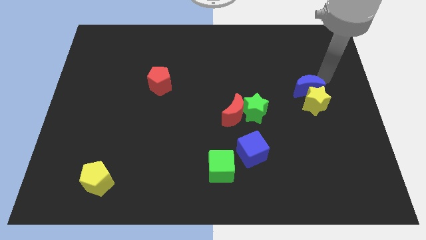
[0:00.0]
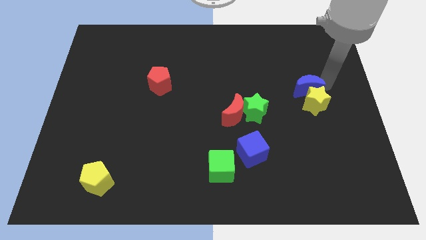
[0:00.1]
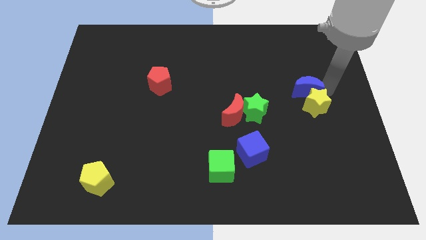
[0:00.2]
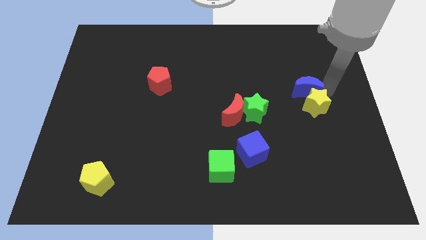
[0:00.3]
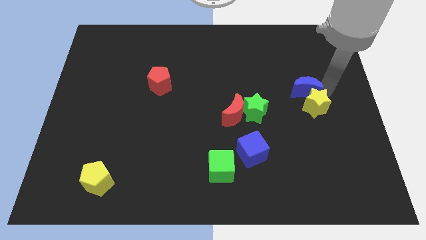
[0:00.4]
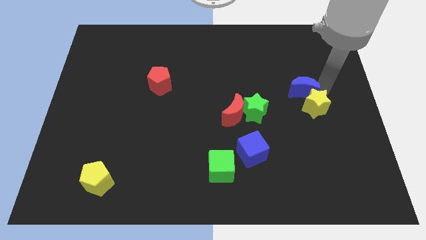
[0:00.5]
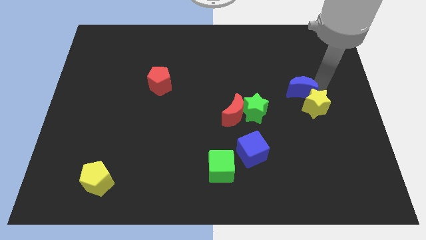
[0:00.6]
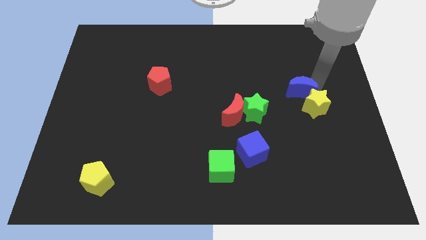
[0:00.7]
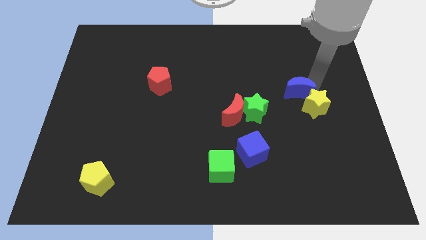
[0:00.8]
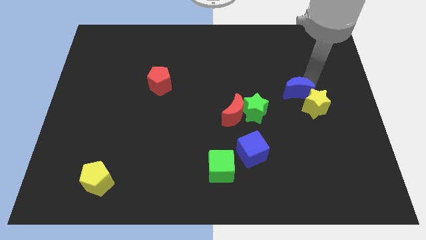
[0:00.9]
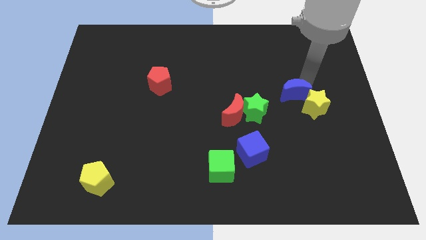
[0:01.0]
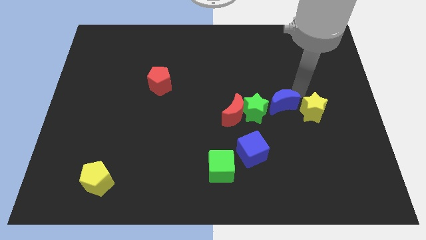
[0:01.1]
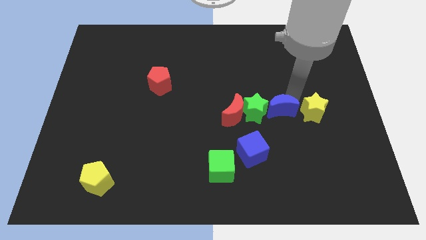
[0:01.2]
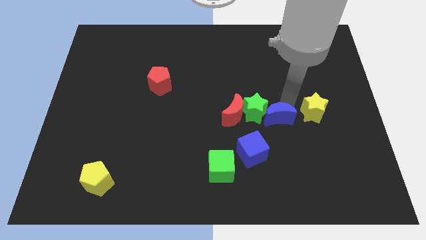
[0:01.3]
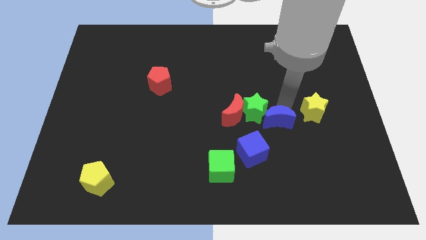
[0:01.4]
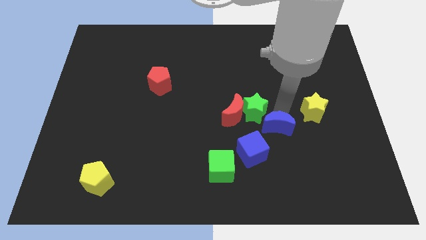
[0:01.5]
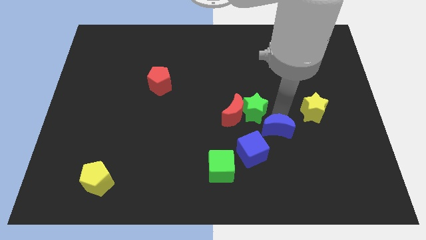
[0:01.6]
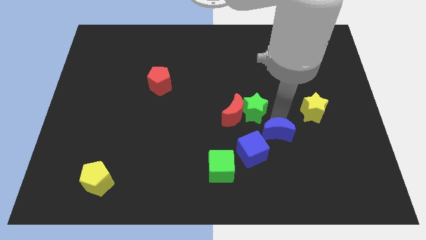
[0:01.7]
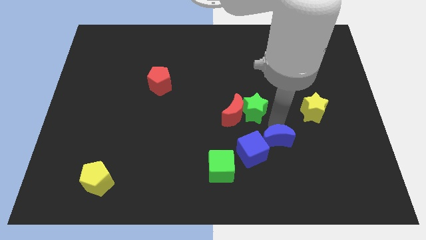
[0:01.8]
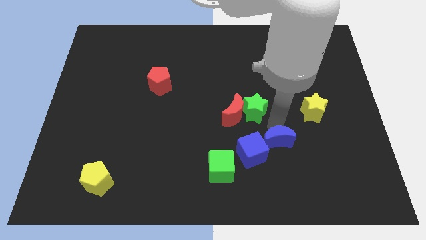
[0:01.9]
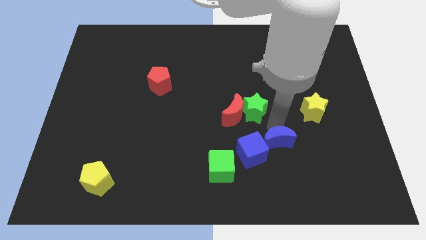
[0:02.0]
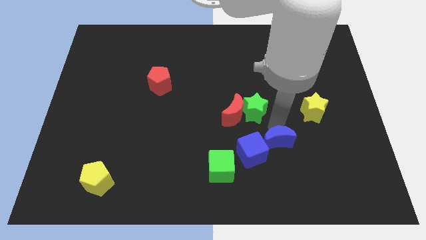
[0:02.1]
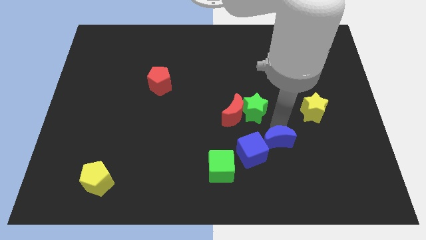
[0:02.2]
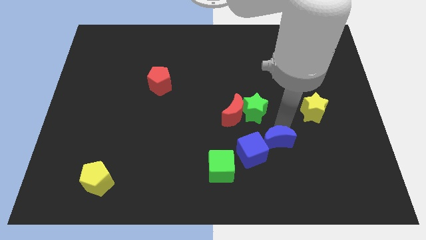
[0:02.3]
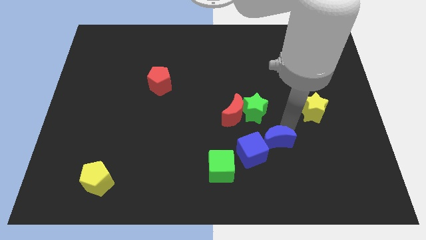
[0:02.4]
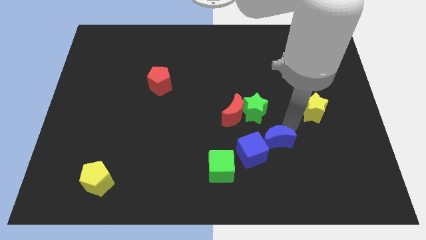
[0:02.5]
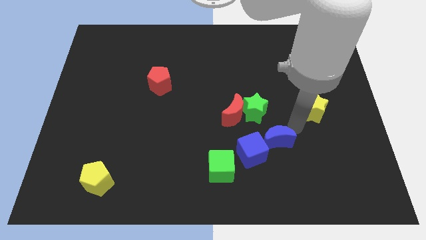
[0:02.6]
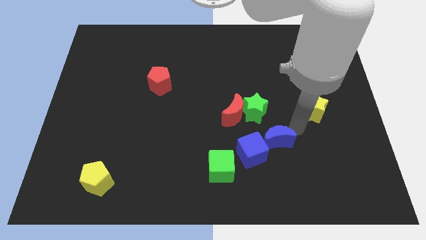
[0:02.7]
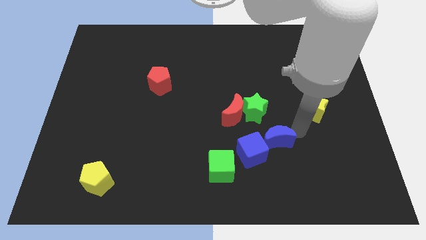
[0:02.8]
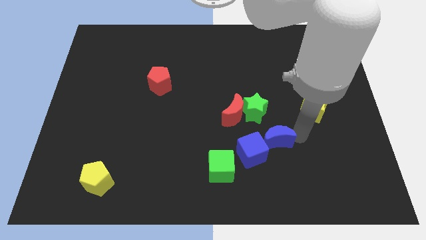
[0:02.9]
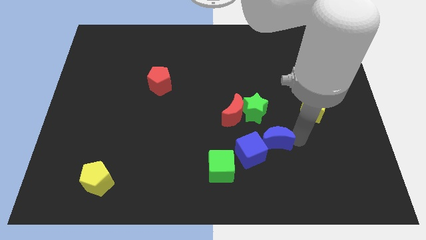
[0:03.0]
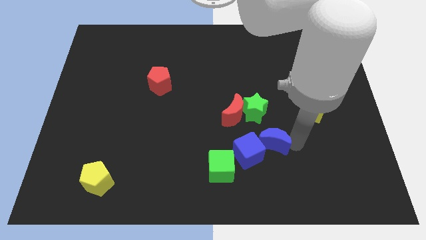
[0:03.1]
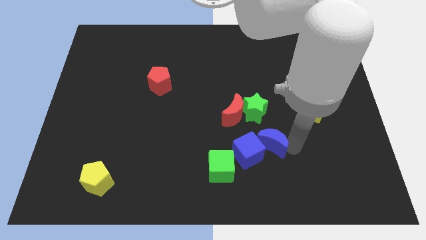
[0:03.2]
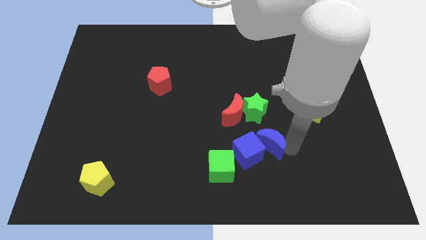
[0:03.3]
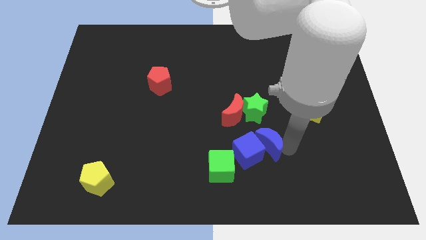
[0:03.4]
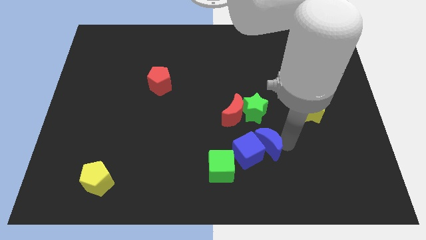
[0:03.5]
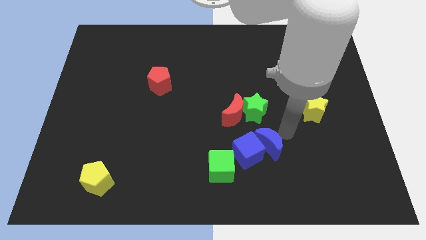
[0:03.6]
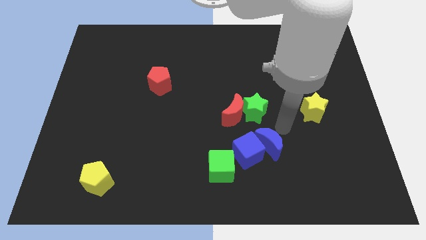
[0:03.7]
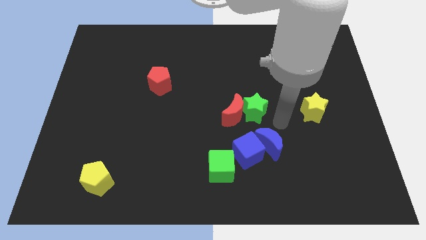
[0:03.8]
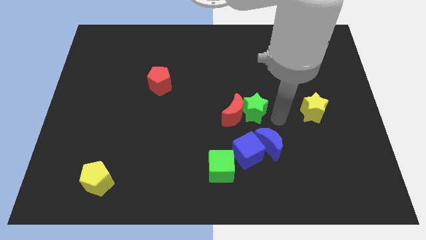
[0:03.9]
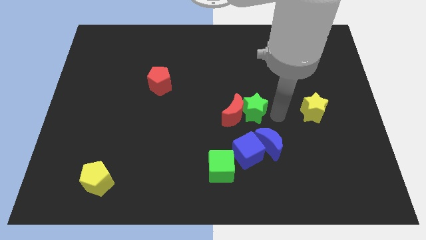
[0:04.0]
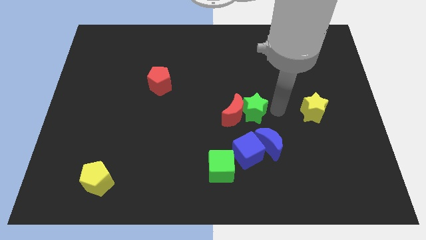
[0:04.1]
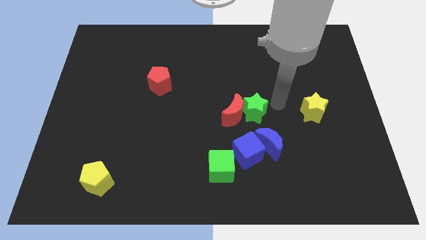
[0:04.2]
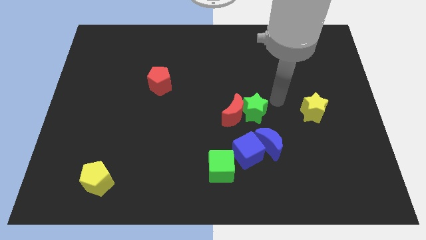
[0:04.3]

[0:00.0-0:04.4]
move the blue crescent into the blue cube

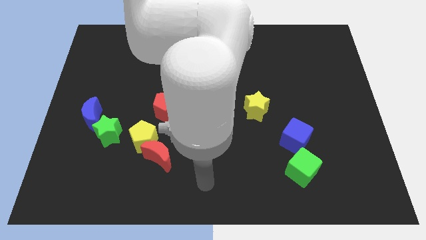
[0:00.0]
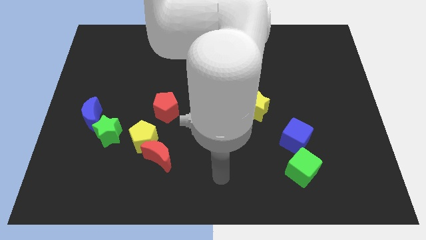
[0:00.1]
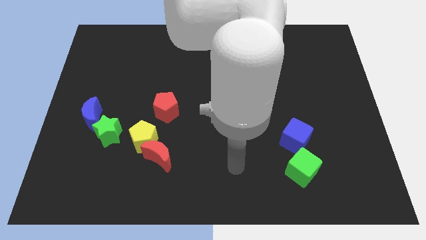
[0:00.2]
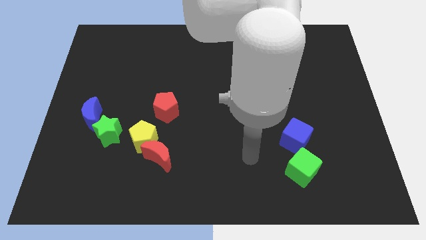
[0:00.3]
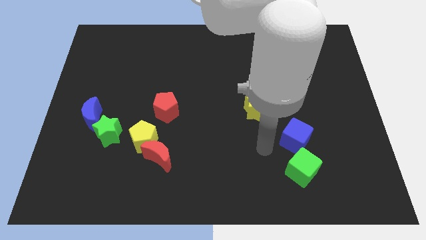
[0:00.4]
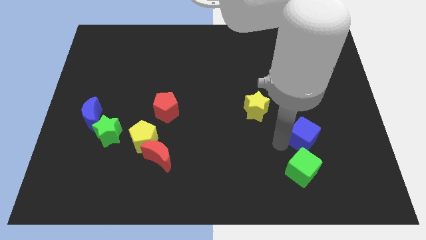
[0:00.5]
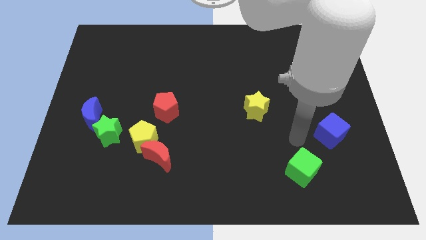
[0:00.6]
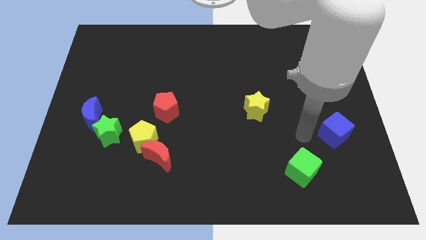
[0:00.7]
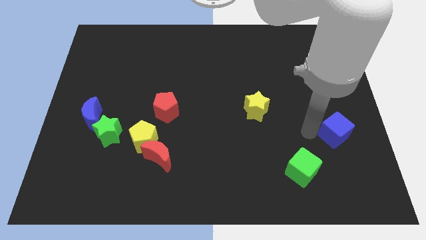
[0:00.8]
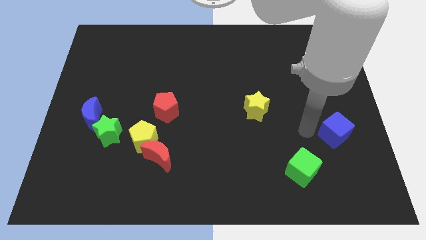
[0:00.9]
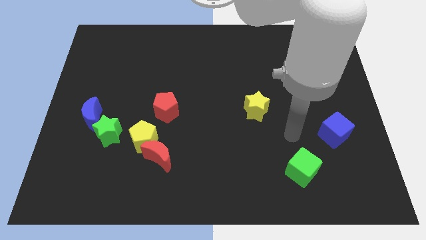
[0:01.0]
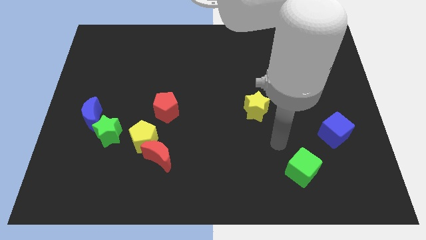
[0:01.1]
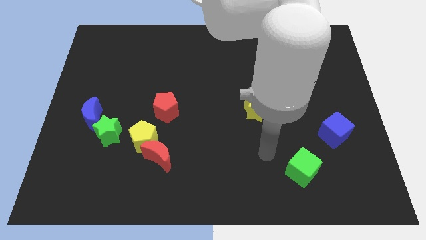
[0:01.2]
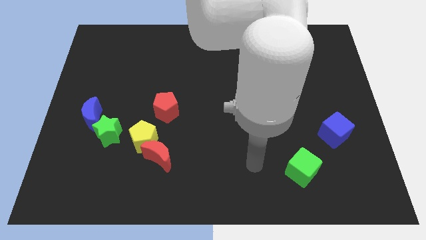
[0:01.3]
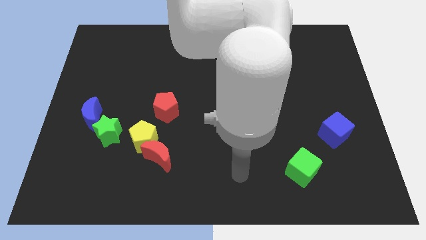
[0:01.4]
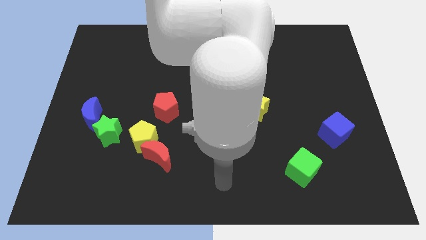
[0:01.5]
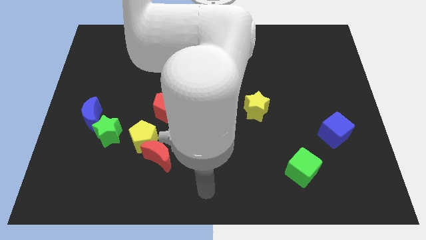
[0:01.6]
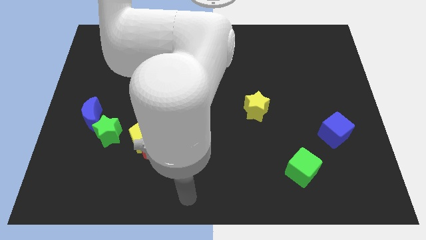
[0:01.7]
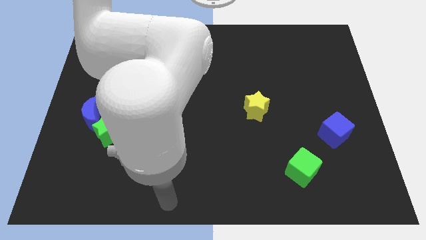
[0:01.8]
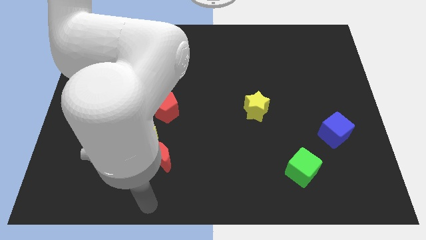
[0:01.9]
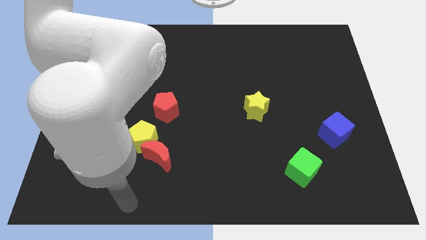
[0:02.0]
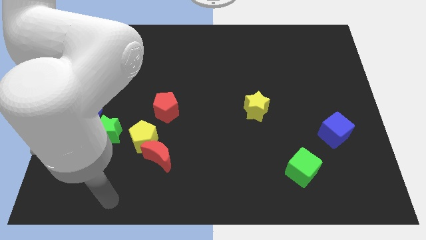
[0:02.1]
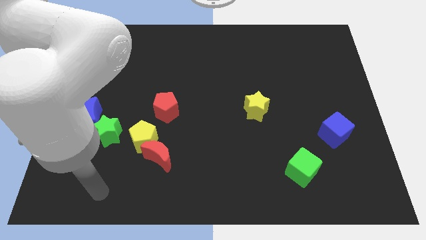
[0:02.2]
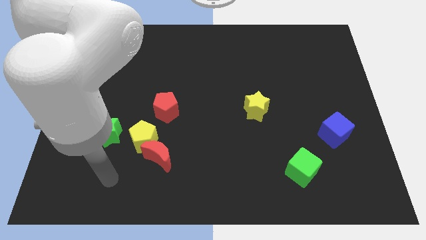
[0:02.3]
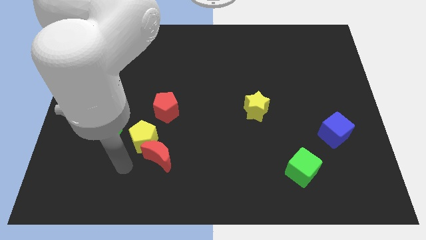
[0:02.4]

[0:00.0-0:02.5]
slightly push the blue cube diagonal above green cube

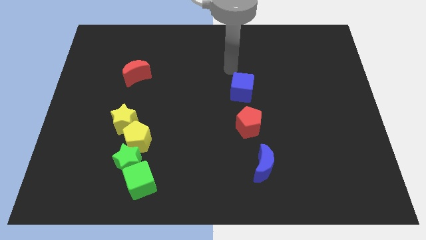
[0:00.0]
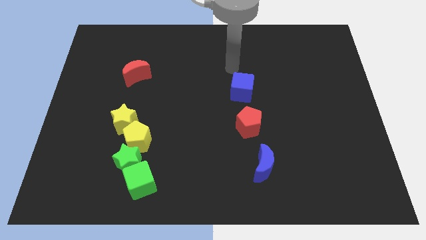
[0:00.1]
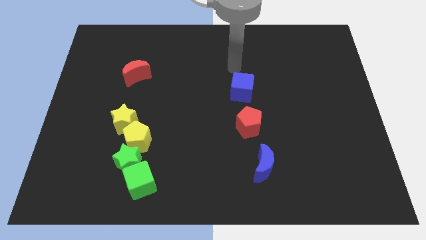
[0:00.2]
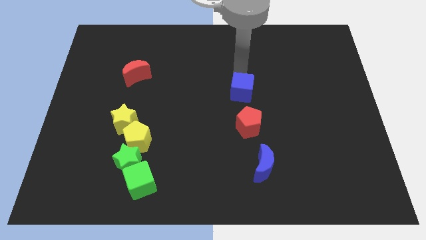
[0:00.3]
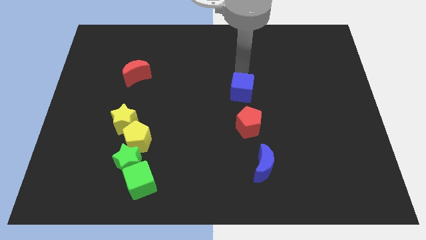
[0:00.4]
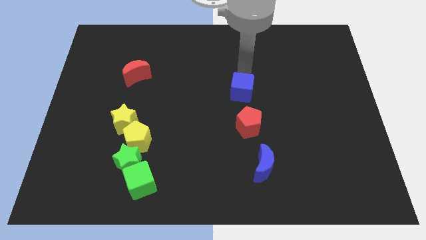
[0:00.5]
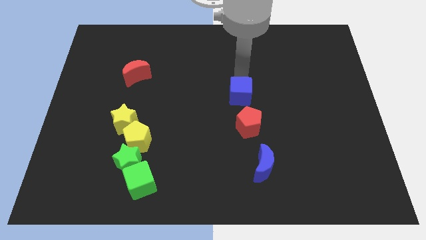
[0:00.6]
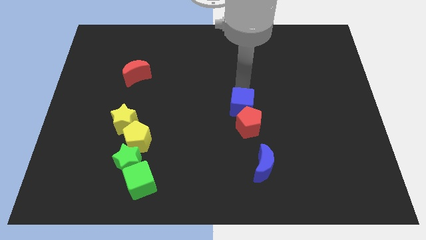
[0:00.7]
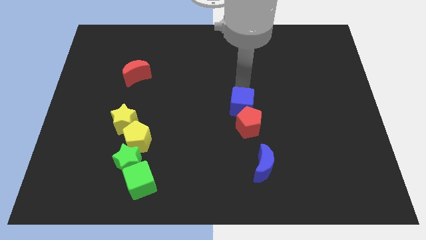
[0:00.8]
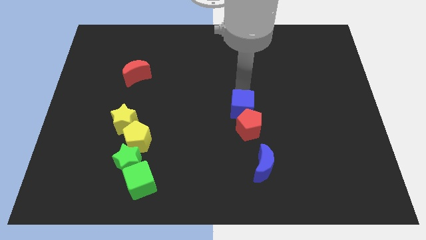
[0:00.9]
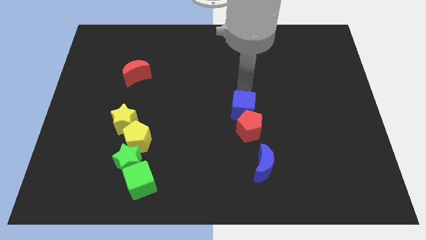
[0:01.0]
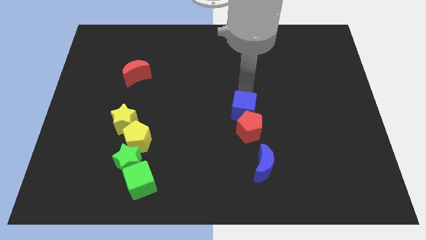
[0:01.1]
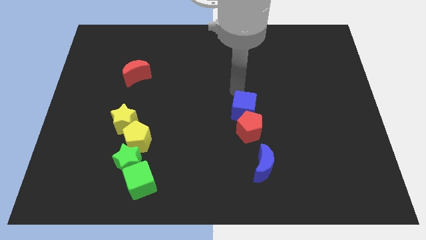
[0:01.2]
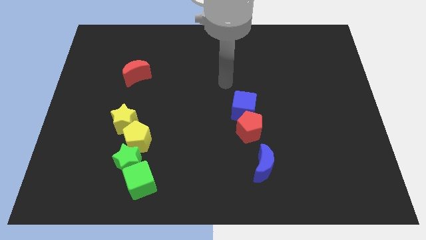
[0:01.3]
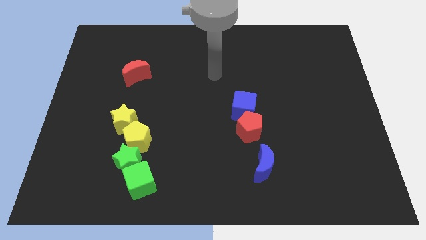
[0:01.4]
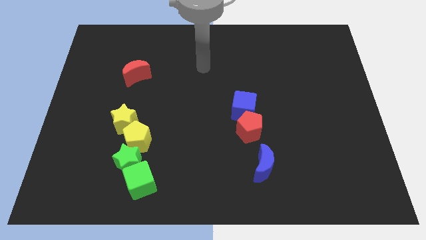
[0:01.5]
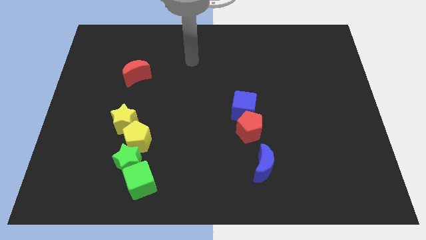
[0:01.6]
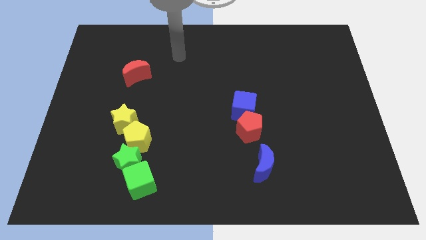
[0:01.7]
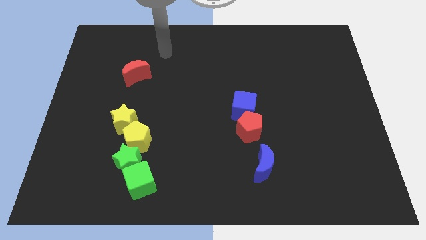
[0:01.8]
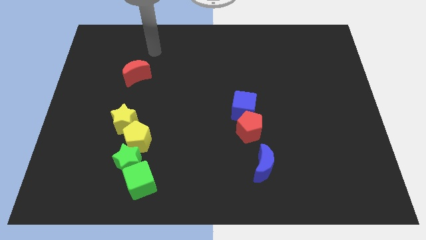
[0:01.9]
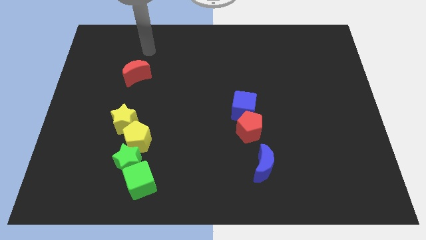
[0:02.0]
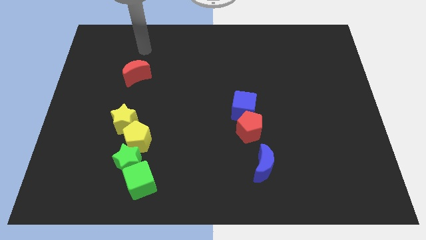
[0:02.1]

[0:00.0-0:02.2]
attach the blue moon to the red pentagon
